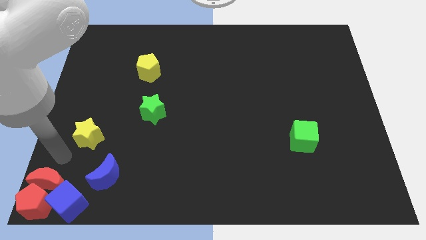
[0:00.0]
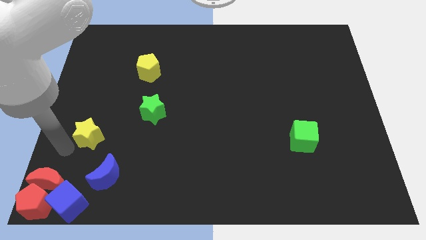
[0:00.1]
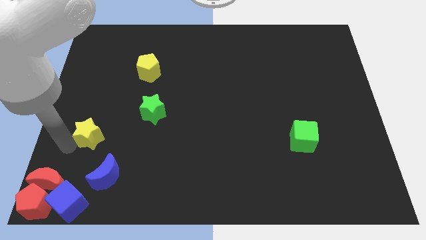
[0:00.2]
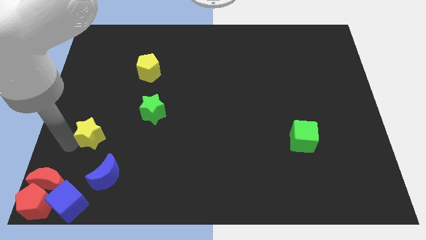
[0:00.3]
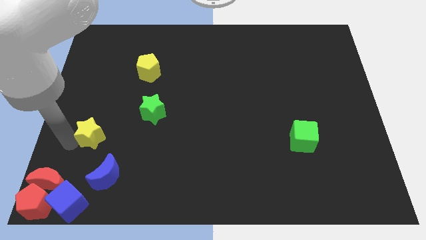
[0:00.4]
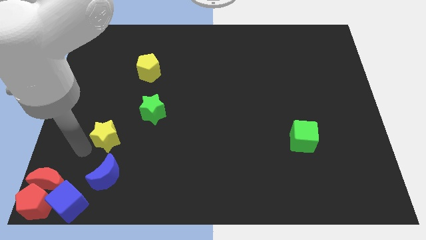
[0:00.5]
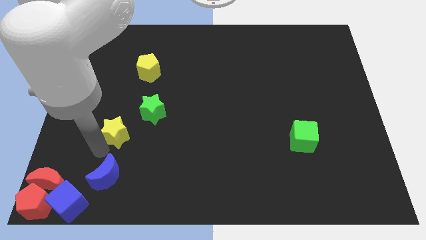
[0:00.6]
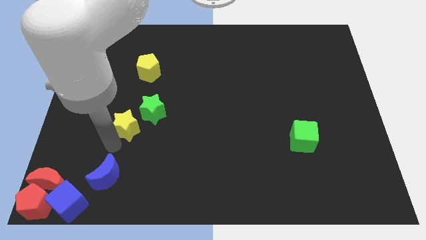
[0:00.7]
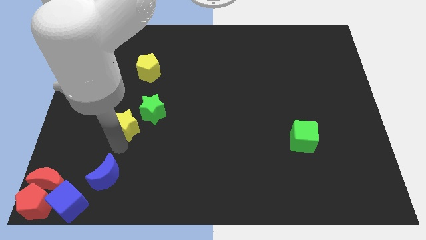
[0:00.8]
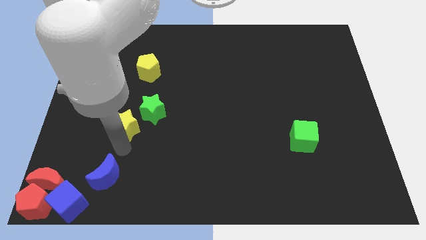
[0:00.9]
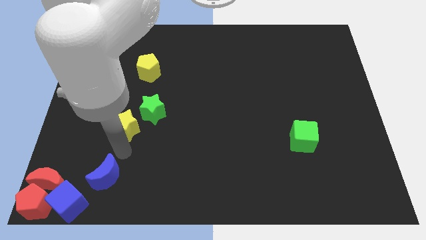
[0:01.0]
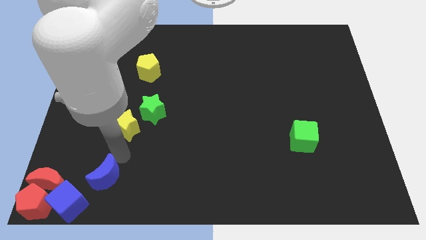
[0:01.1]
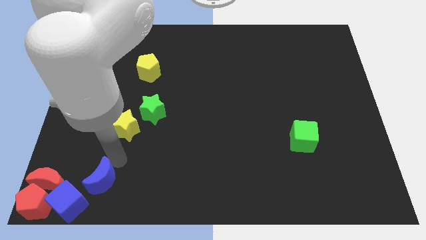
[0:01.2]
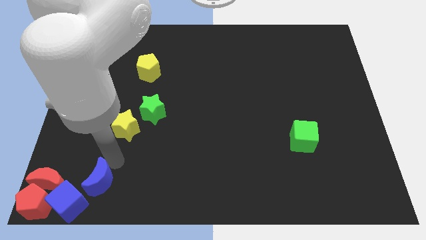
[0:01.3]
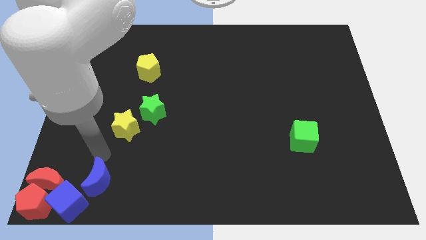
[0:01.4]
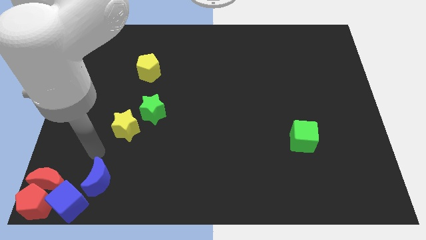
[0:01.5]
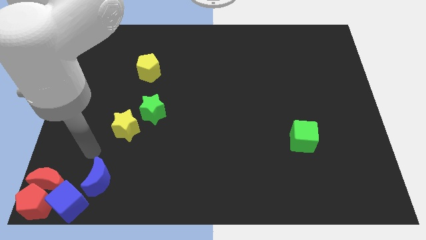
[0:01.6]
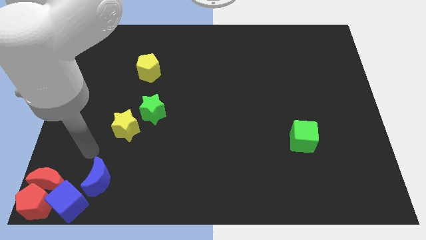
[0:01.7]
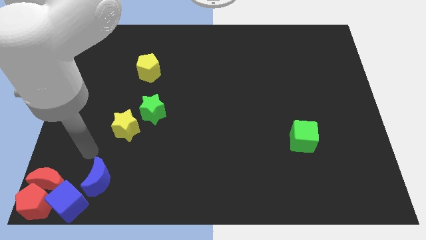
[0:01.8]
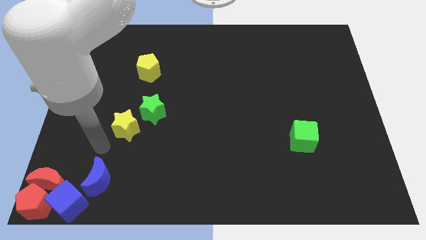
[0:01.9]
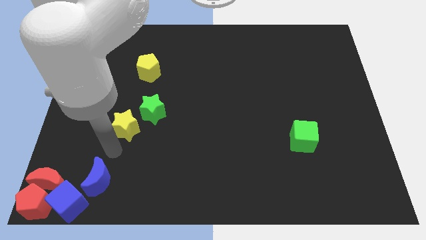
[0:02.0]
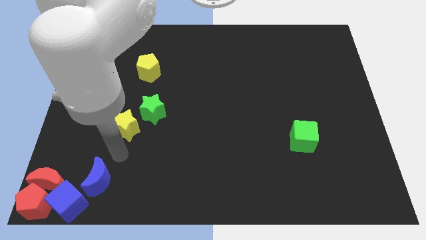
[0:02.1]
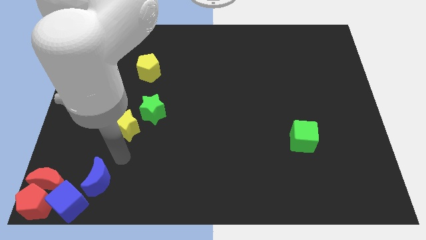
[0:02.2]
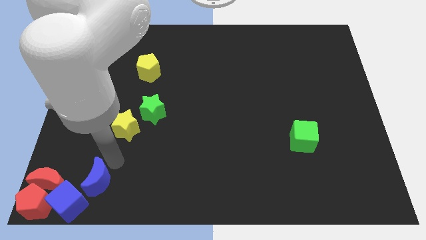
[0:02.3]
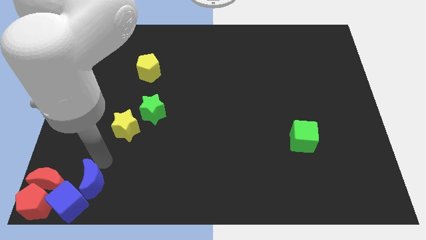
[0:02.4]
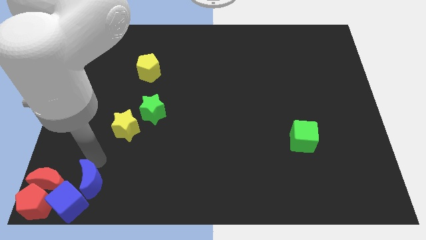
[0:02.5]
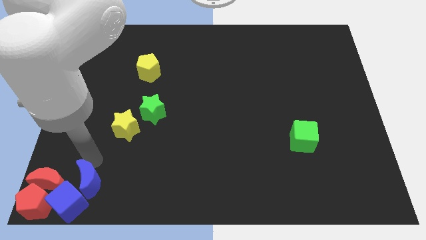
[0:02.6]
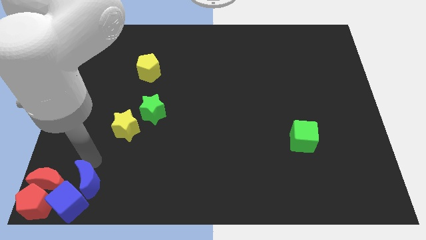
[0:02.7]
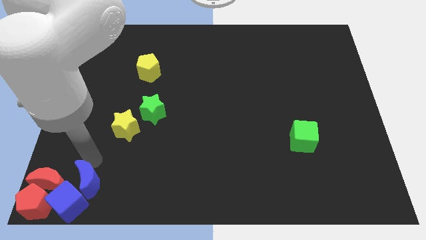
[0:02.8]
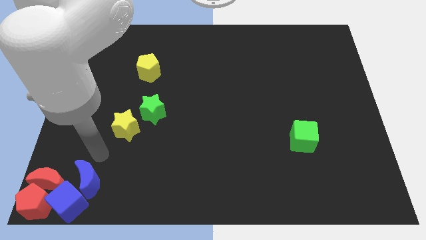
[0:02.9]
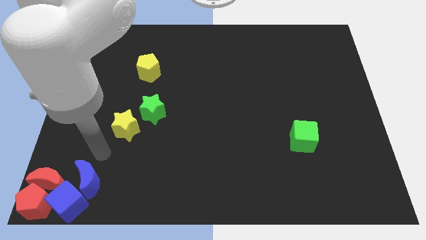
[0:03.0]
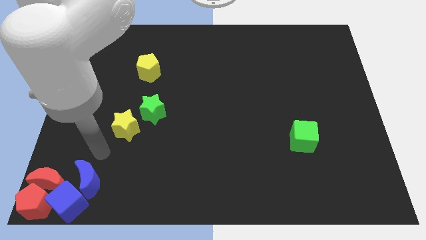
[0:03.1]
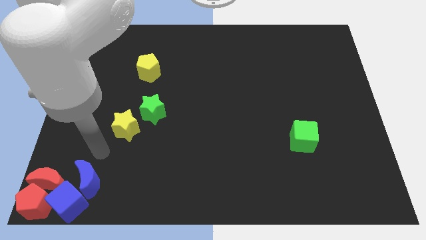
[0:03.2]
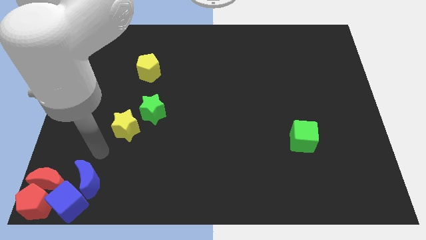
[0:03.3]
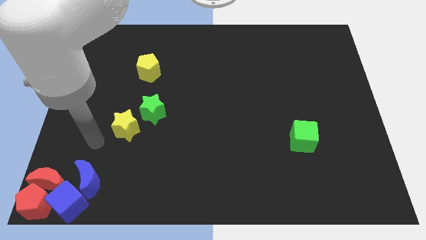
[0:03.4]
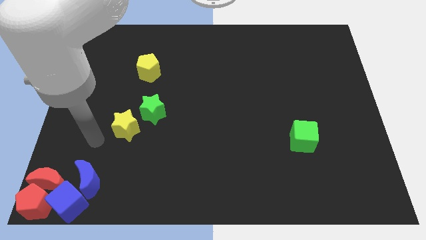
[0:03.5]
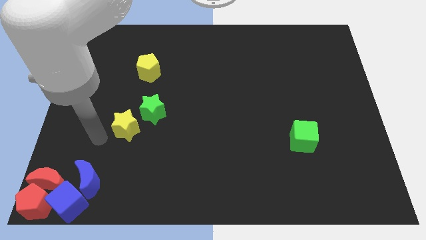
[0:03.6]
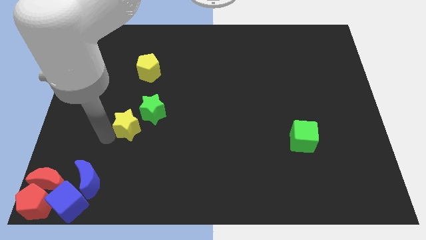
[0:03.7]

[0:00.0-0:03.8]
put the blue crescent to the top right side of the blue cube

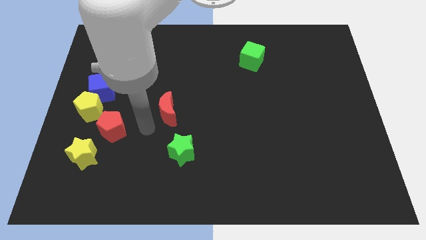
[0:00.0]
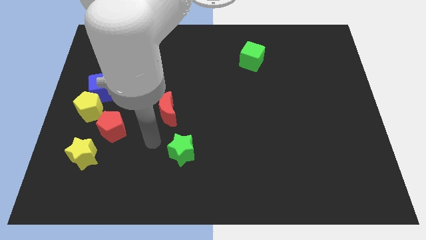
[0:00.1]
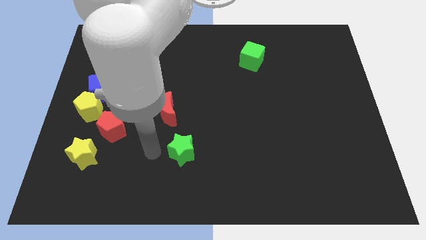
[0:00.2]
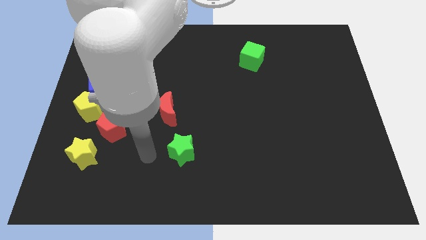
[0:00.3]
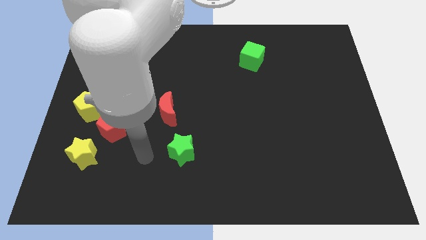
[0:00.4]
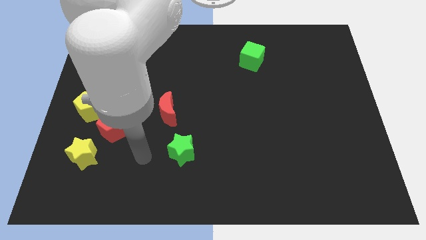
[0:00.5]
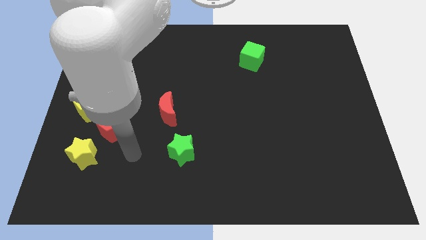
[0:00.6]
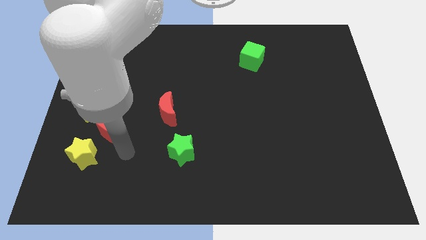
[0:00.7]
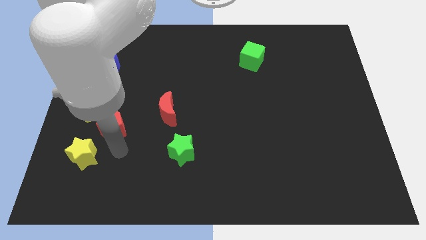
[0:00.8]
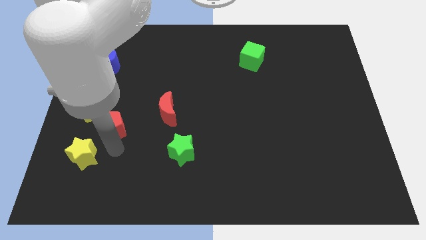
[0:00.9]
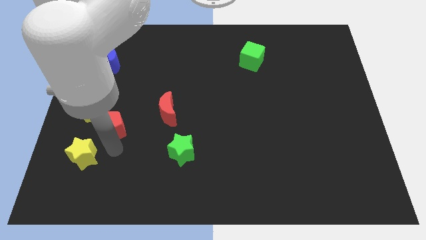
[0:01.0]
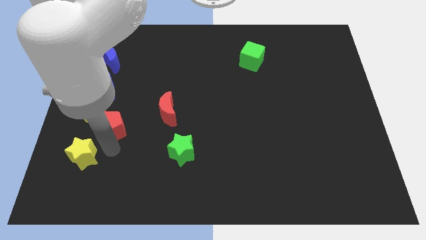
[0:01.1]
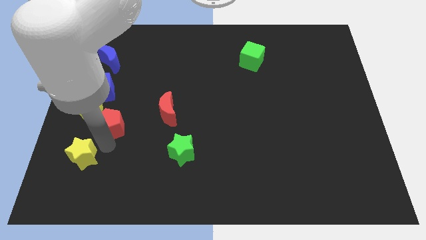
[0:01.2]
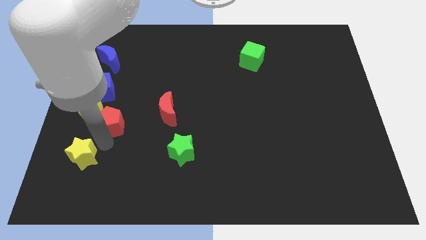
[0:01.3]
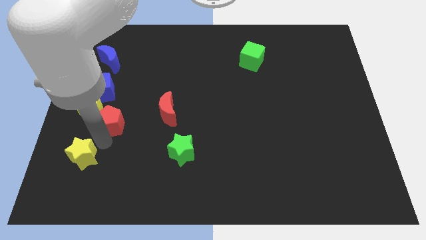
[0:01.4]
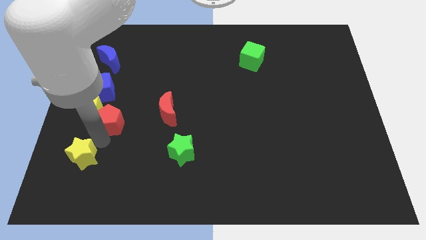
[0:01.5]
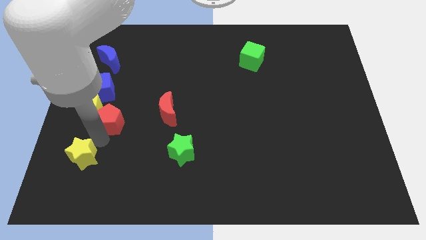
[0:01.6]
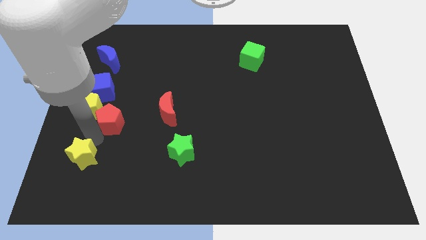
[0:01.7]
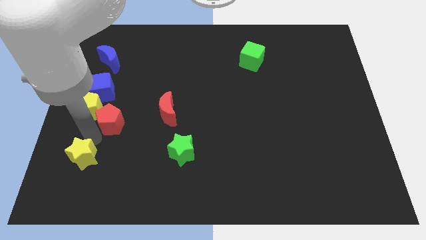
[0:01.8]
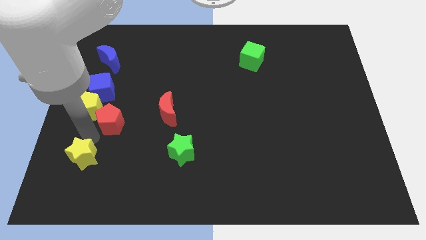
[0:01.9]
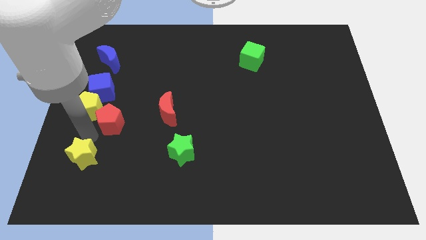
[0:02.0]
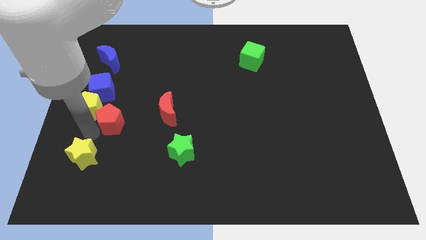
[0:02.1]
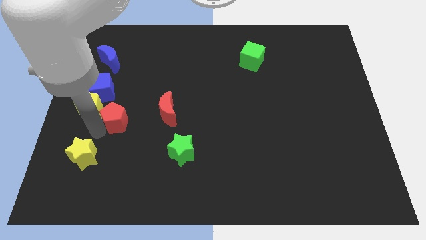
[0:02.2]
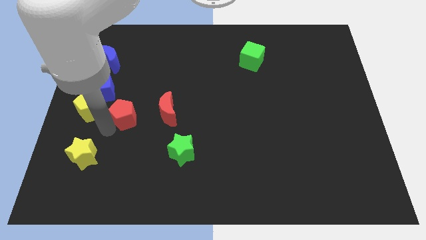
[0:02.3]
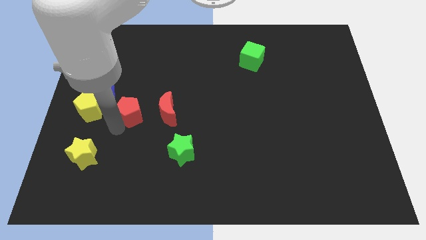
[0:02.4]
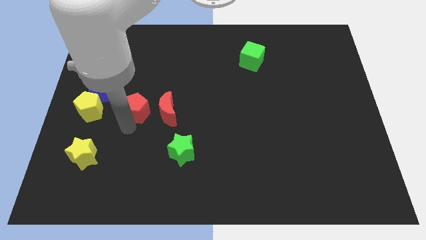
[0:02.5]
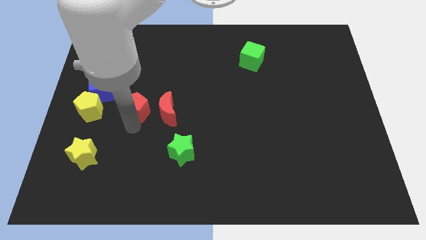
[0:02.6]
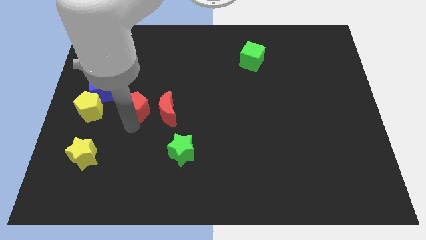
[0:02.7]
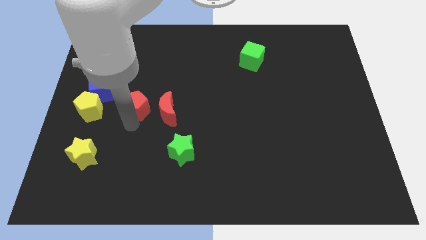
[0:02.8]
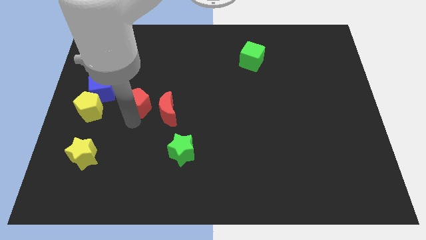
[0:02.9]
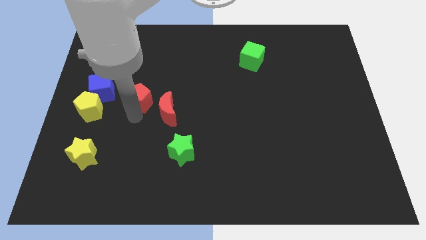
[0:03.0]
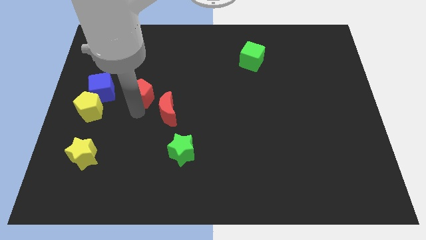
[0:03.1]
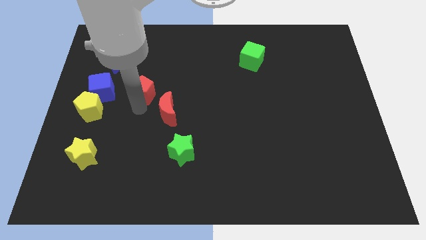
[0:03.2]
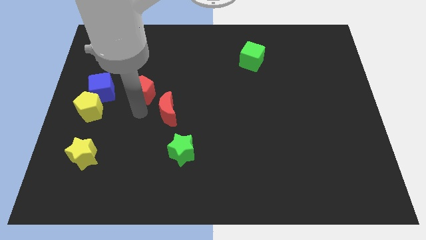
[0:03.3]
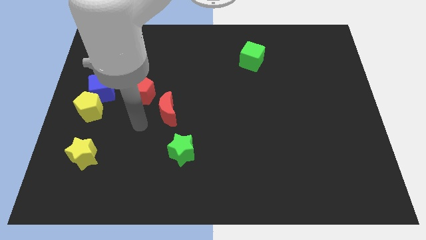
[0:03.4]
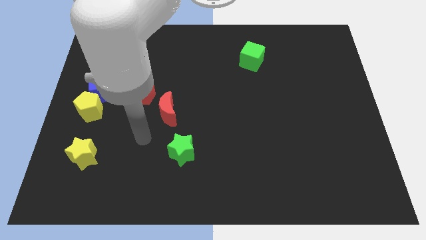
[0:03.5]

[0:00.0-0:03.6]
push the red pentagon diagonally upward

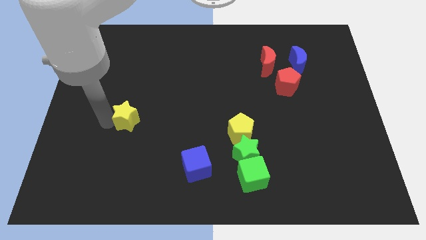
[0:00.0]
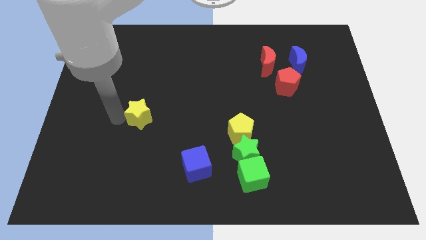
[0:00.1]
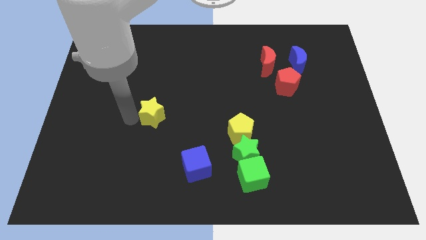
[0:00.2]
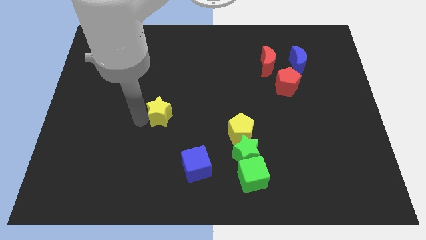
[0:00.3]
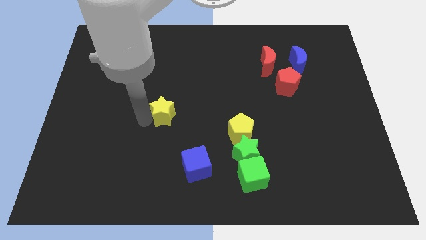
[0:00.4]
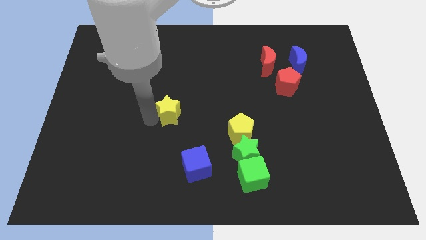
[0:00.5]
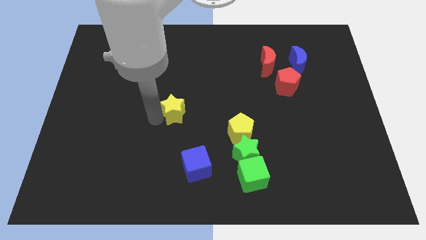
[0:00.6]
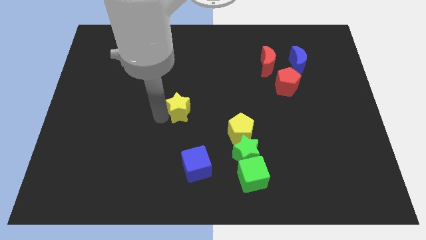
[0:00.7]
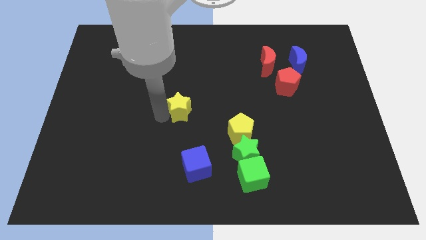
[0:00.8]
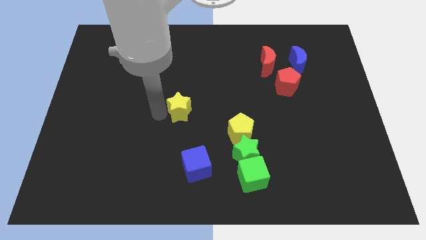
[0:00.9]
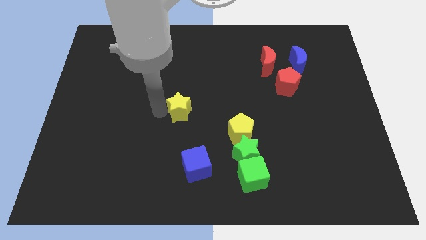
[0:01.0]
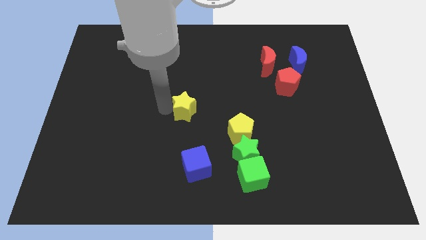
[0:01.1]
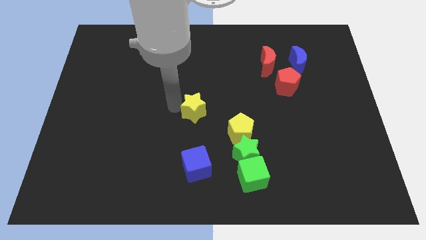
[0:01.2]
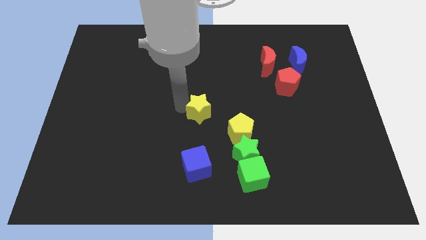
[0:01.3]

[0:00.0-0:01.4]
place yellow star to the top of blue cube

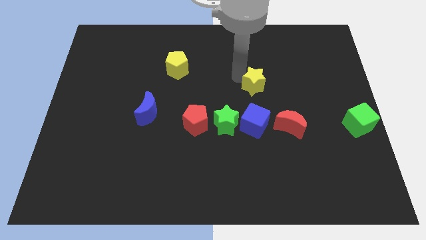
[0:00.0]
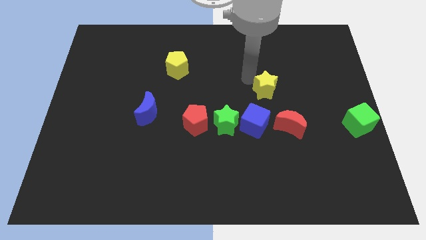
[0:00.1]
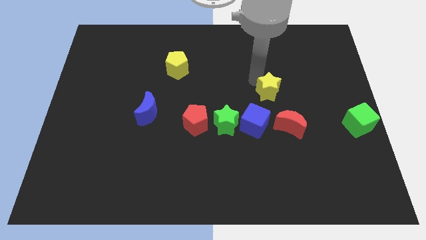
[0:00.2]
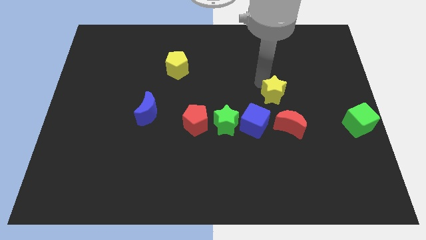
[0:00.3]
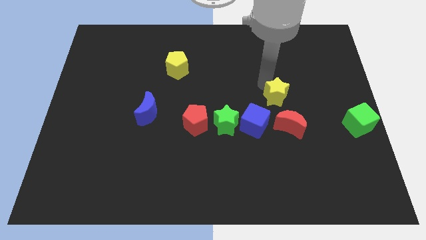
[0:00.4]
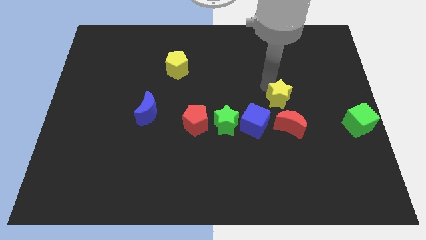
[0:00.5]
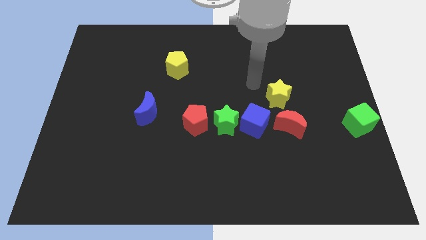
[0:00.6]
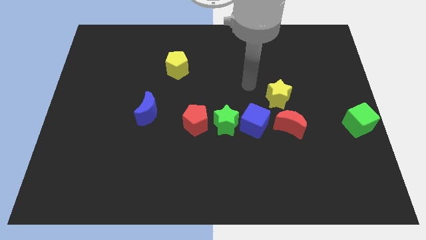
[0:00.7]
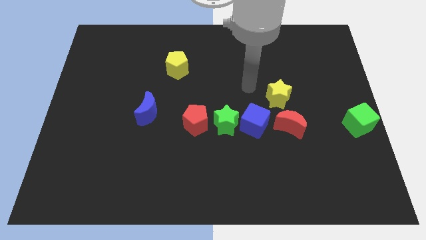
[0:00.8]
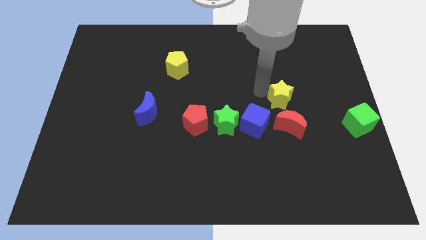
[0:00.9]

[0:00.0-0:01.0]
put the yellow star above the red crescent
